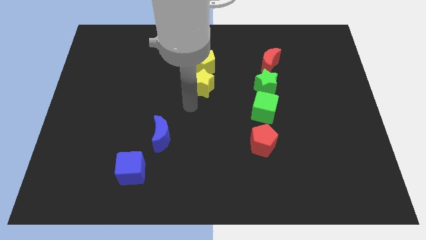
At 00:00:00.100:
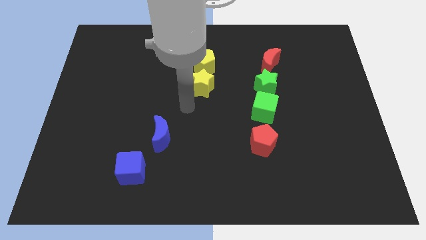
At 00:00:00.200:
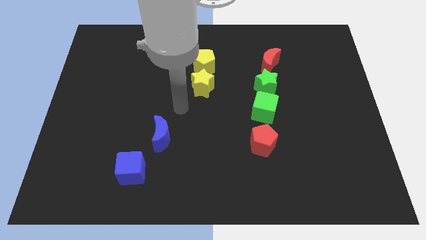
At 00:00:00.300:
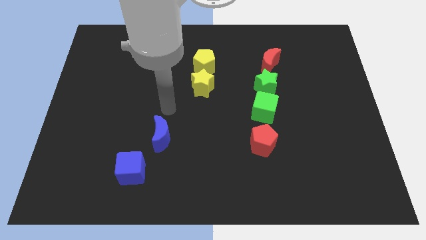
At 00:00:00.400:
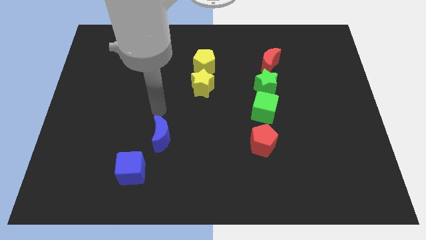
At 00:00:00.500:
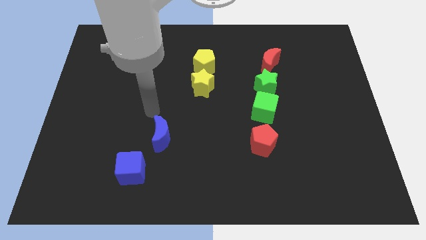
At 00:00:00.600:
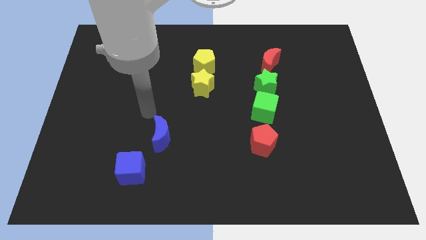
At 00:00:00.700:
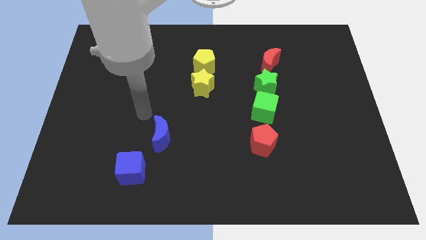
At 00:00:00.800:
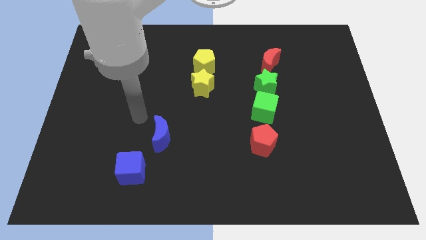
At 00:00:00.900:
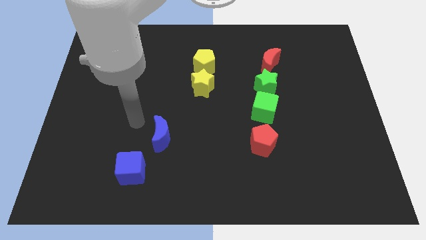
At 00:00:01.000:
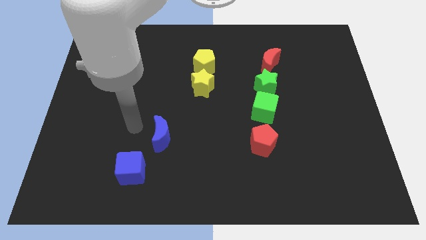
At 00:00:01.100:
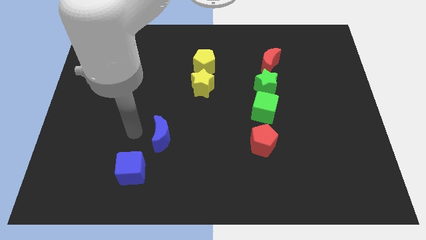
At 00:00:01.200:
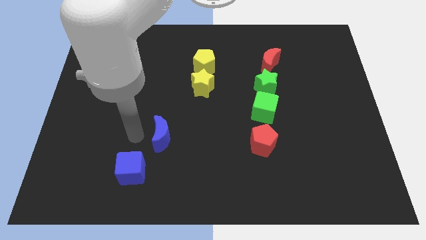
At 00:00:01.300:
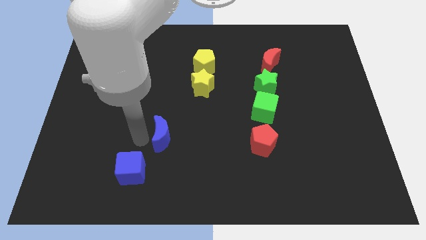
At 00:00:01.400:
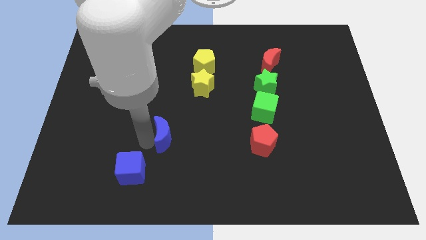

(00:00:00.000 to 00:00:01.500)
place your arm to the left of the blue moon

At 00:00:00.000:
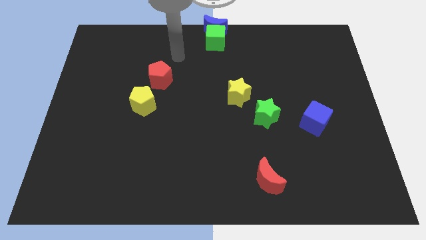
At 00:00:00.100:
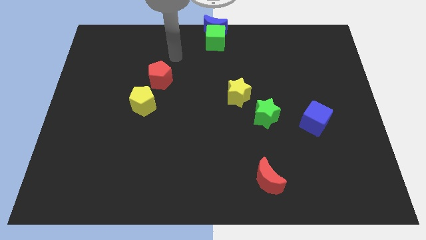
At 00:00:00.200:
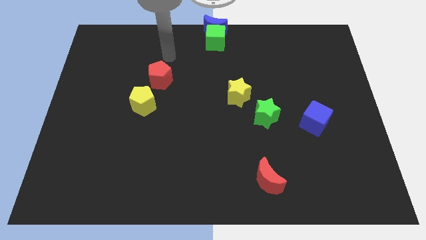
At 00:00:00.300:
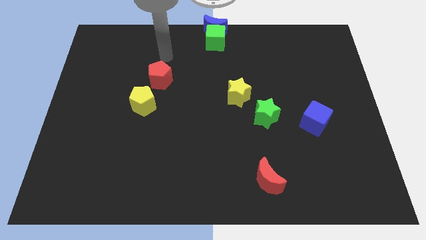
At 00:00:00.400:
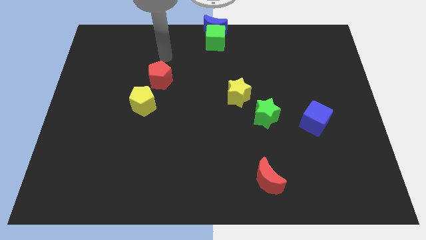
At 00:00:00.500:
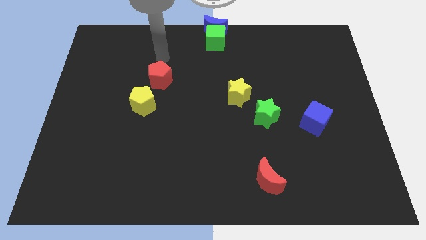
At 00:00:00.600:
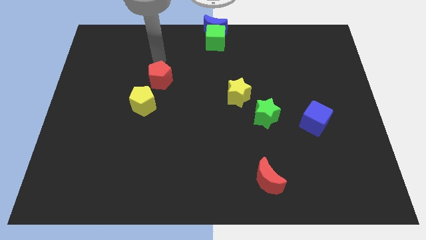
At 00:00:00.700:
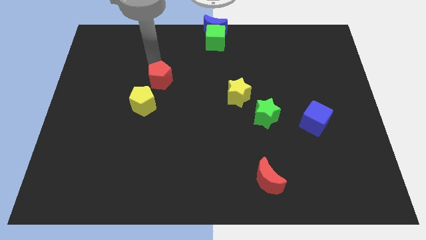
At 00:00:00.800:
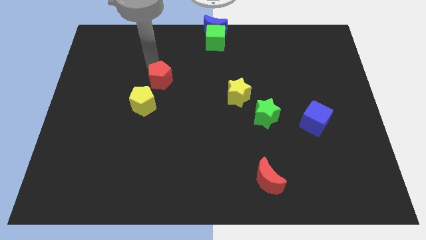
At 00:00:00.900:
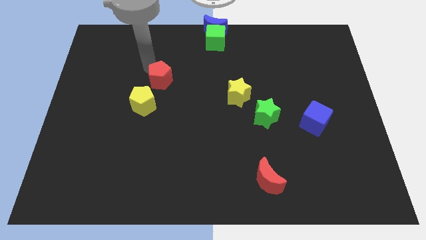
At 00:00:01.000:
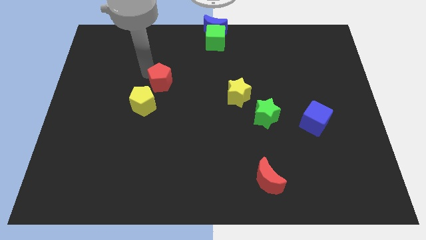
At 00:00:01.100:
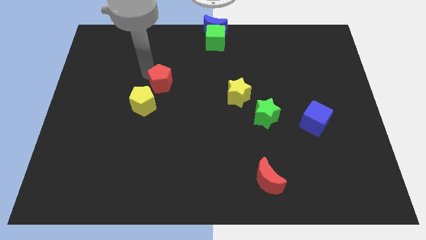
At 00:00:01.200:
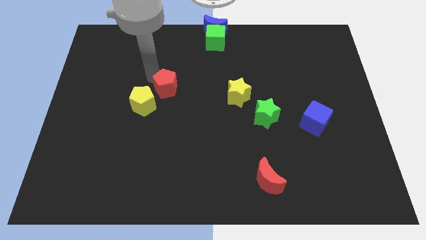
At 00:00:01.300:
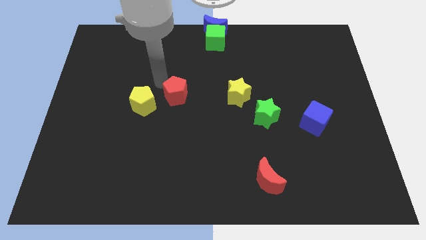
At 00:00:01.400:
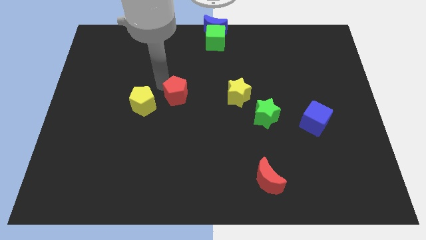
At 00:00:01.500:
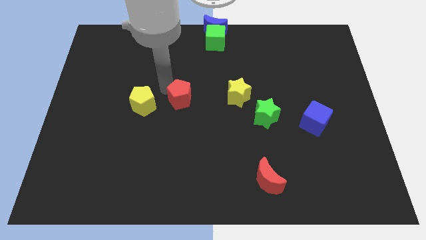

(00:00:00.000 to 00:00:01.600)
move the red pentagon to the right of the yellow pentagon

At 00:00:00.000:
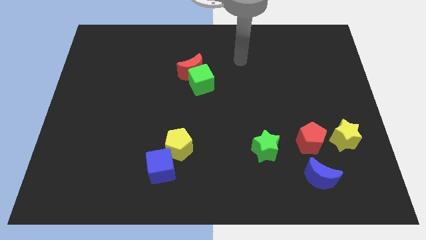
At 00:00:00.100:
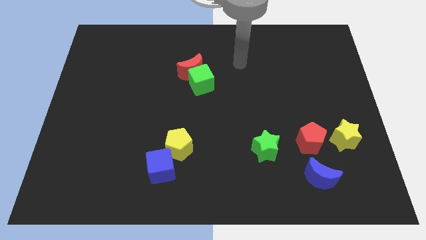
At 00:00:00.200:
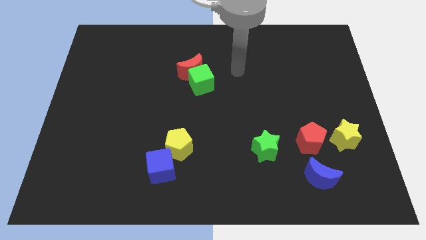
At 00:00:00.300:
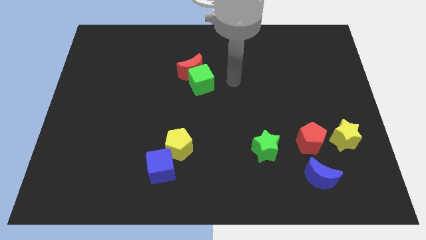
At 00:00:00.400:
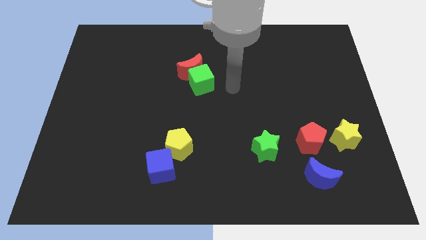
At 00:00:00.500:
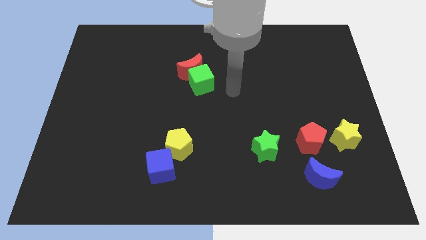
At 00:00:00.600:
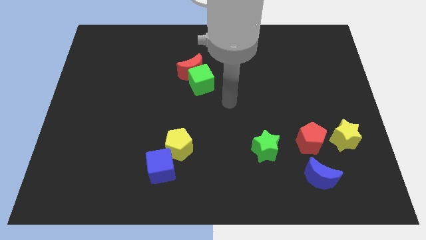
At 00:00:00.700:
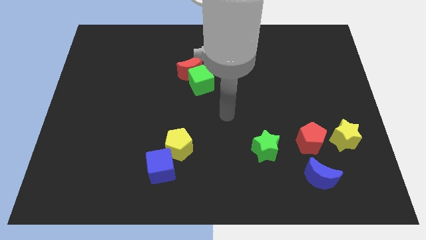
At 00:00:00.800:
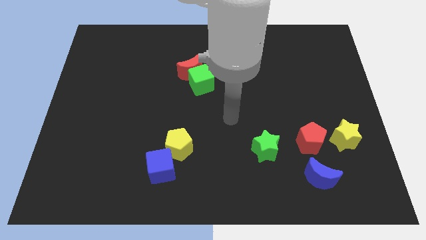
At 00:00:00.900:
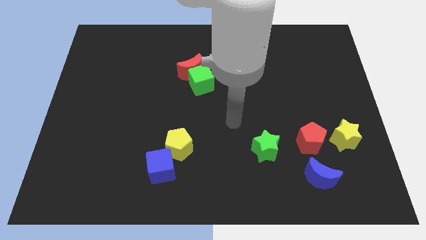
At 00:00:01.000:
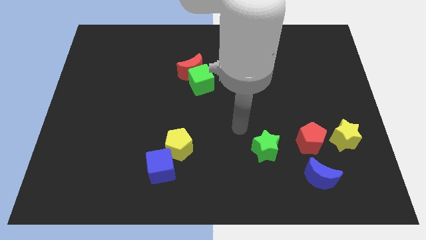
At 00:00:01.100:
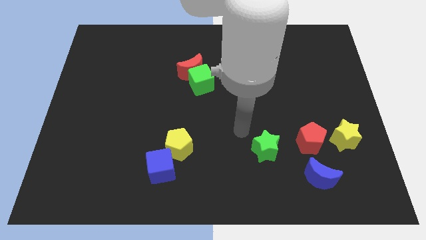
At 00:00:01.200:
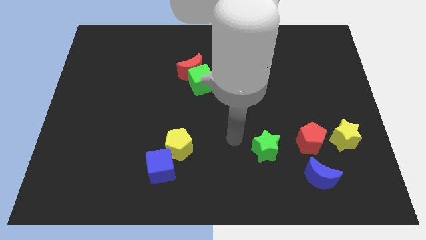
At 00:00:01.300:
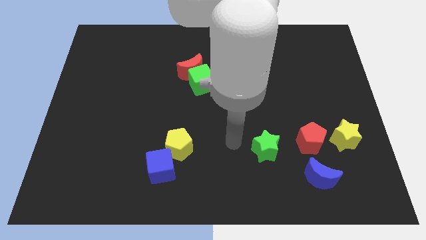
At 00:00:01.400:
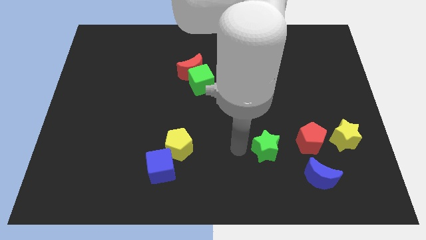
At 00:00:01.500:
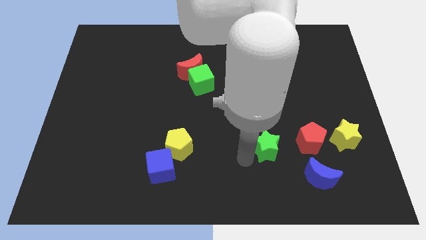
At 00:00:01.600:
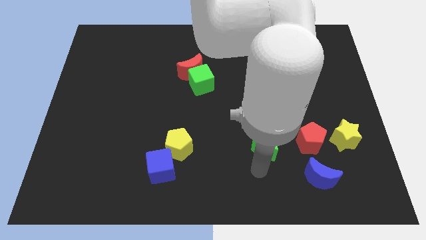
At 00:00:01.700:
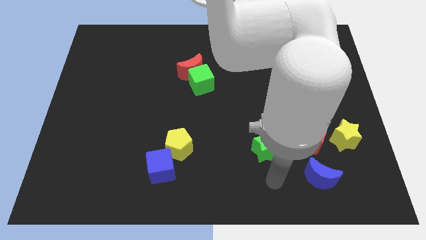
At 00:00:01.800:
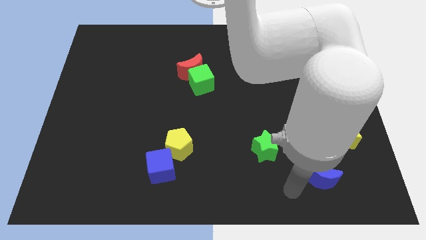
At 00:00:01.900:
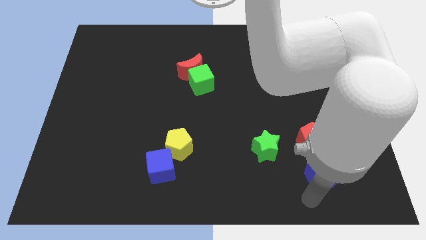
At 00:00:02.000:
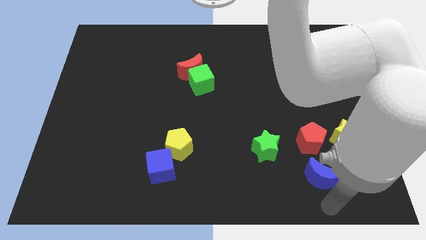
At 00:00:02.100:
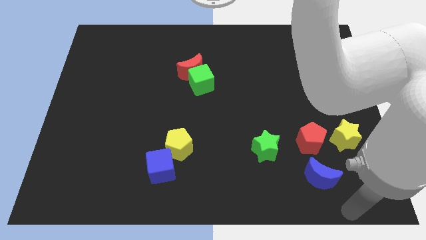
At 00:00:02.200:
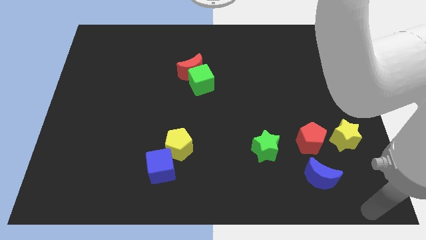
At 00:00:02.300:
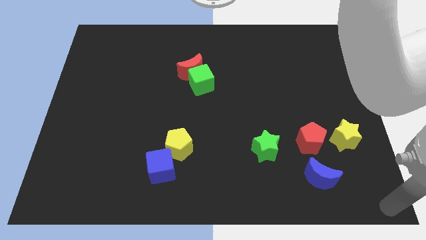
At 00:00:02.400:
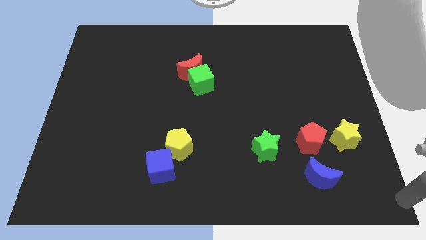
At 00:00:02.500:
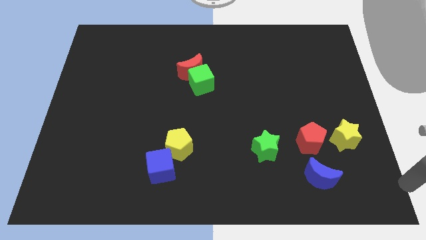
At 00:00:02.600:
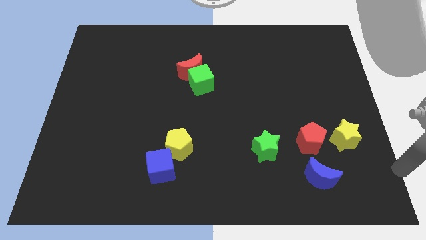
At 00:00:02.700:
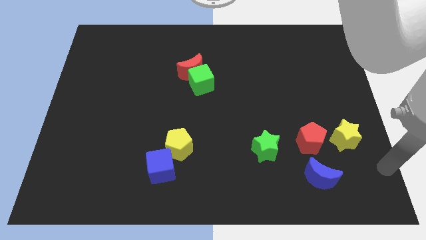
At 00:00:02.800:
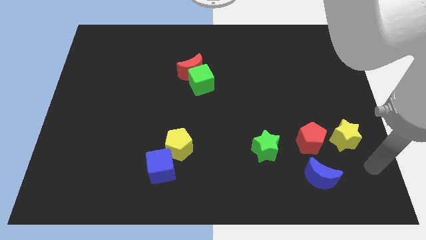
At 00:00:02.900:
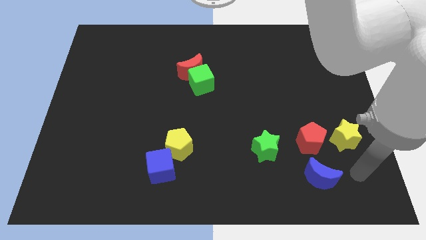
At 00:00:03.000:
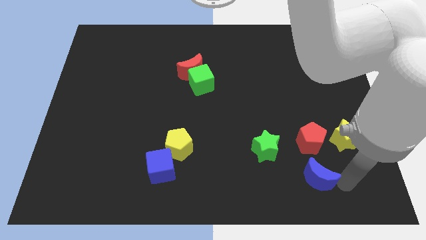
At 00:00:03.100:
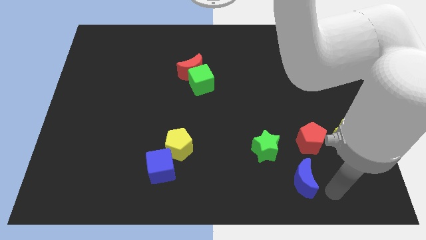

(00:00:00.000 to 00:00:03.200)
move your arm towards the blue crescent

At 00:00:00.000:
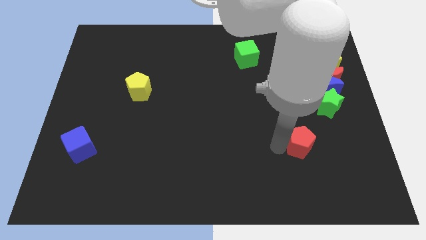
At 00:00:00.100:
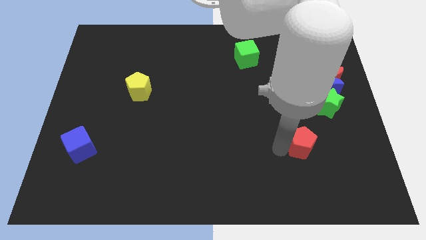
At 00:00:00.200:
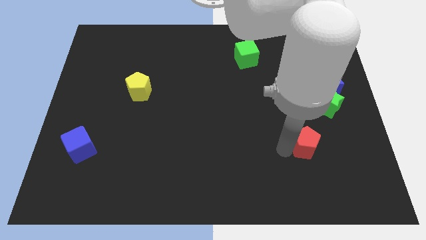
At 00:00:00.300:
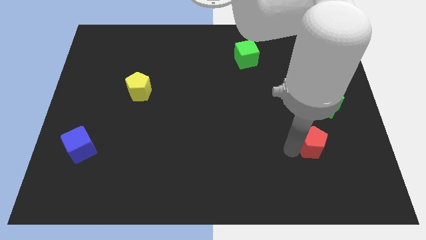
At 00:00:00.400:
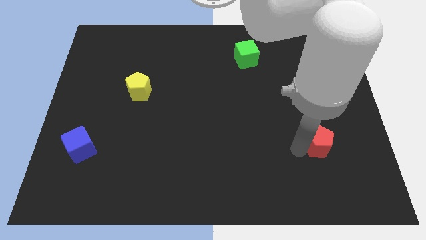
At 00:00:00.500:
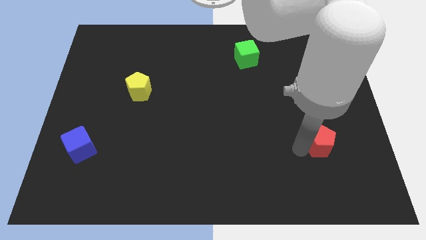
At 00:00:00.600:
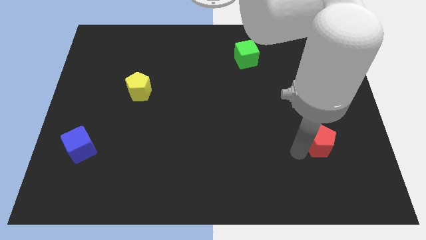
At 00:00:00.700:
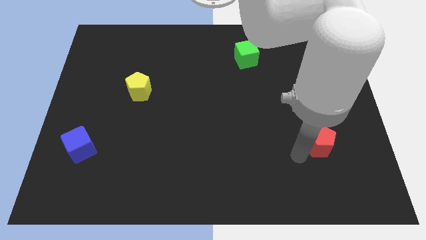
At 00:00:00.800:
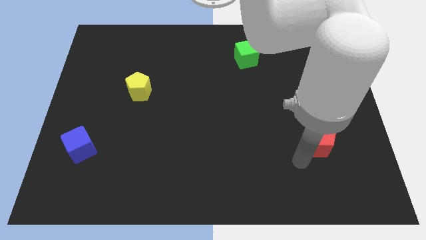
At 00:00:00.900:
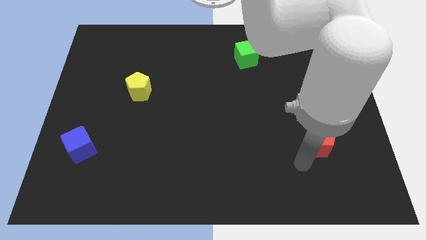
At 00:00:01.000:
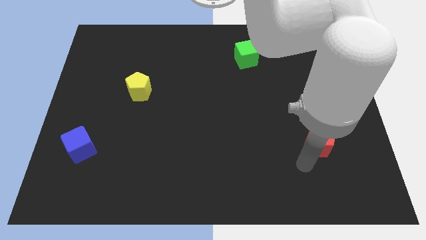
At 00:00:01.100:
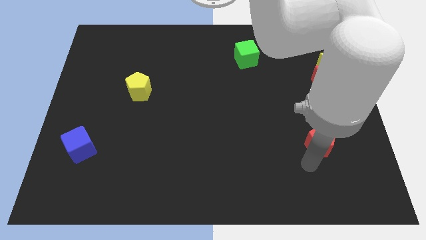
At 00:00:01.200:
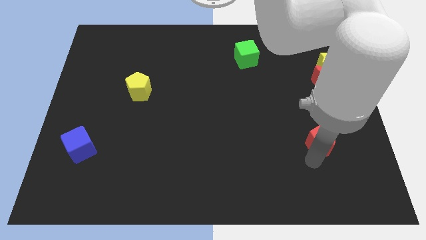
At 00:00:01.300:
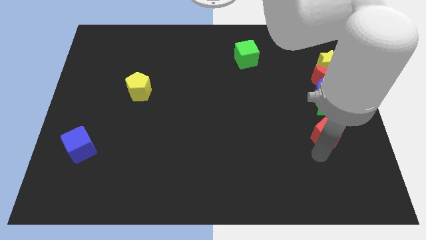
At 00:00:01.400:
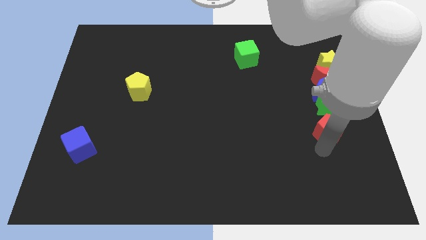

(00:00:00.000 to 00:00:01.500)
move the red pentagon below the green star

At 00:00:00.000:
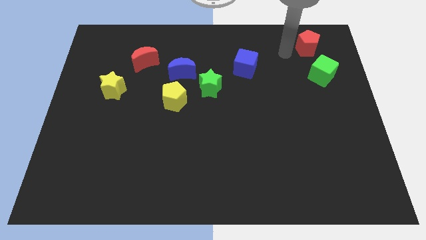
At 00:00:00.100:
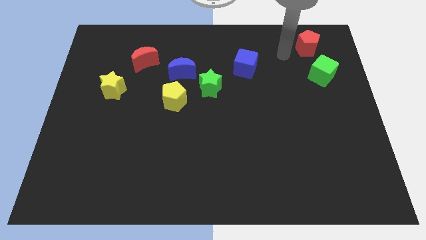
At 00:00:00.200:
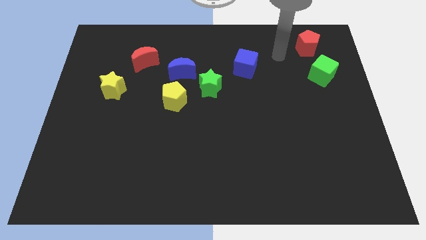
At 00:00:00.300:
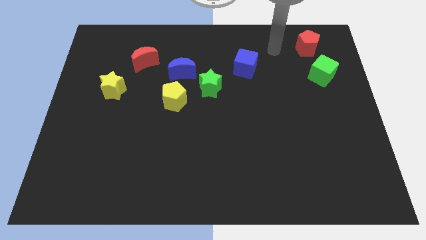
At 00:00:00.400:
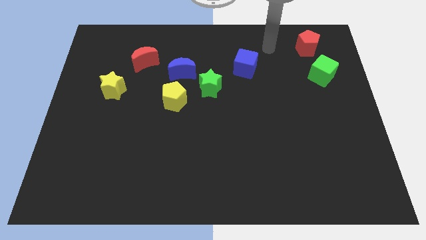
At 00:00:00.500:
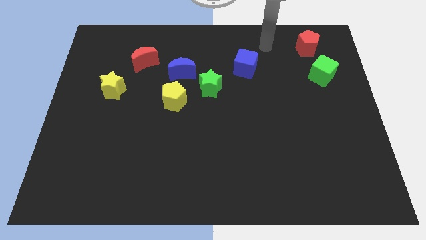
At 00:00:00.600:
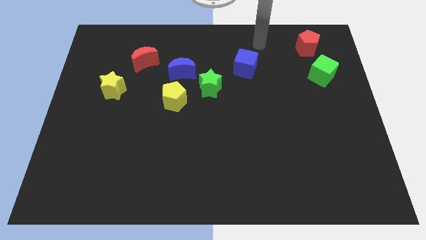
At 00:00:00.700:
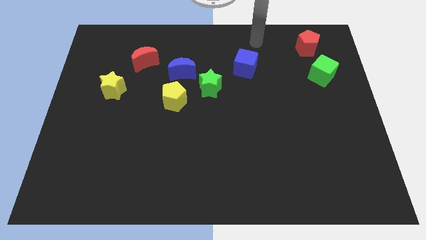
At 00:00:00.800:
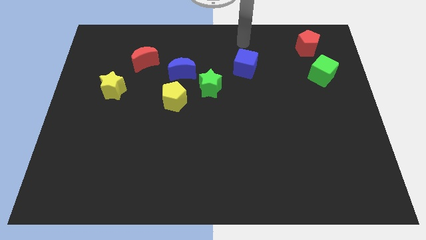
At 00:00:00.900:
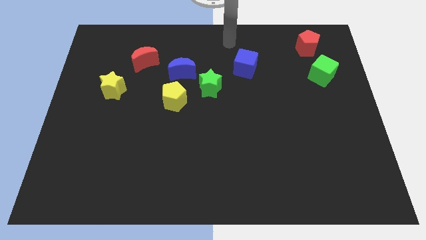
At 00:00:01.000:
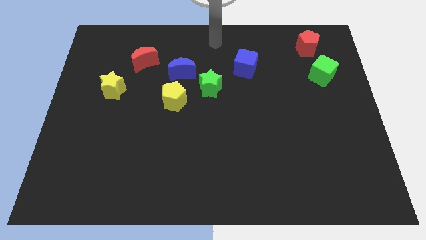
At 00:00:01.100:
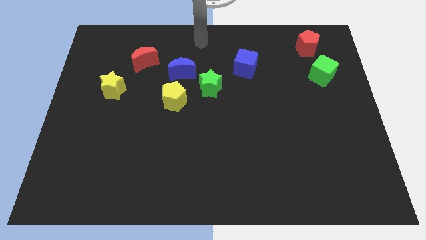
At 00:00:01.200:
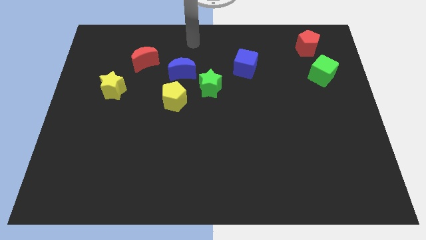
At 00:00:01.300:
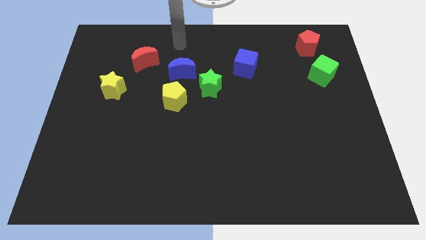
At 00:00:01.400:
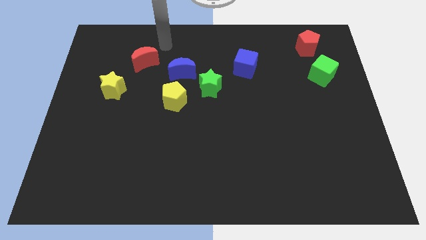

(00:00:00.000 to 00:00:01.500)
move your arm away from red pentagon
